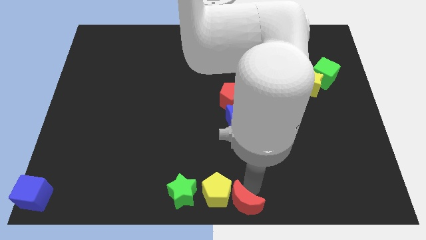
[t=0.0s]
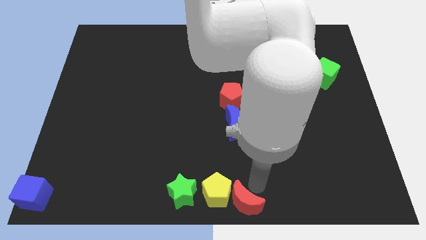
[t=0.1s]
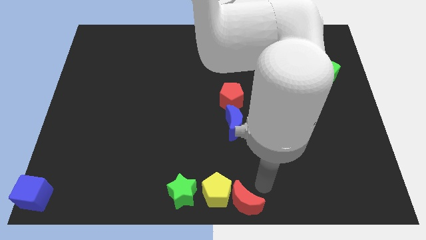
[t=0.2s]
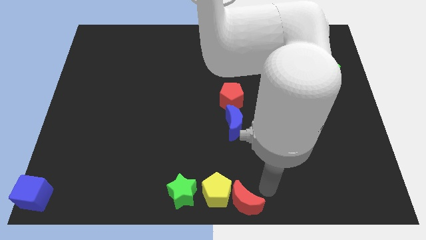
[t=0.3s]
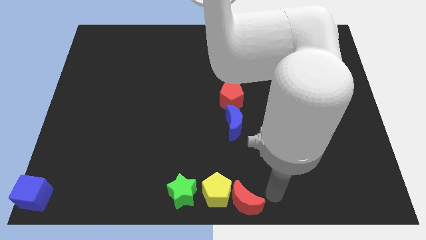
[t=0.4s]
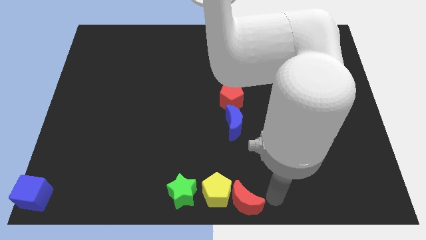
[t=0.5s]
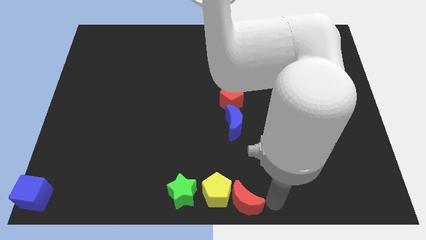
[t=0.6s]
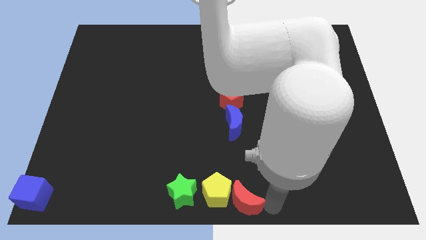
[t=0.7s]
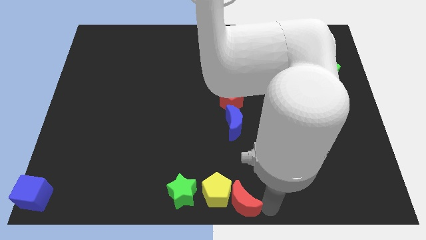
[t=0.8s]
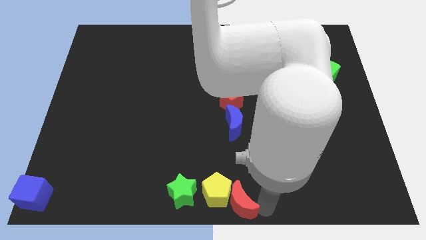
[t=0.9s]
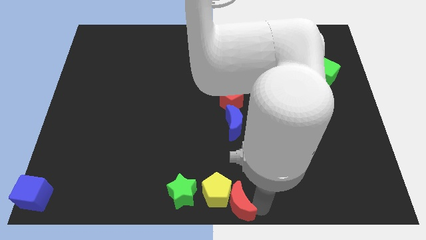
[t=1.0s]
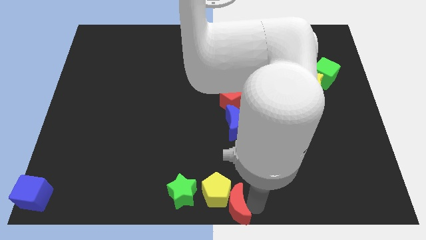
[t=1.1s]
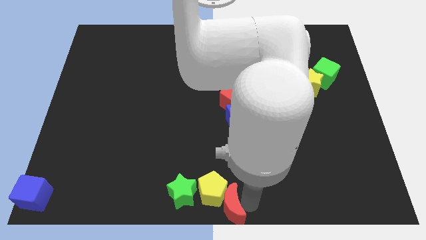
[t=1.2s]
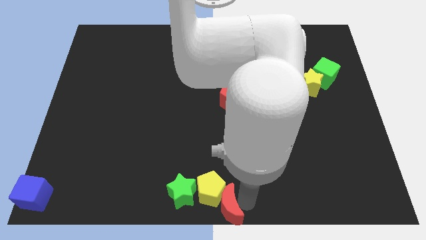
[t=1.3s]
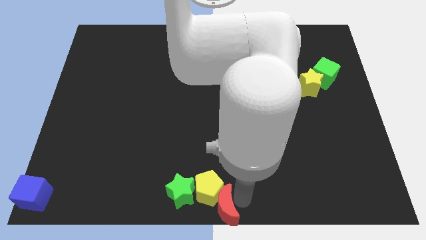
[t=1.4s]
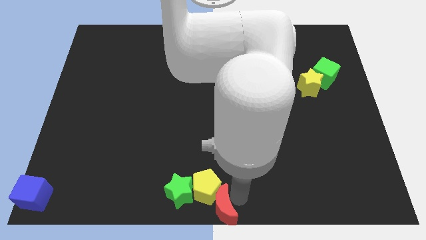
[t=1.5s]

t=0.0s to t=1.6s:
move the red crescent into the yellow pentagon

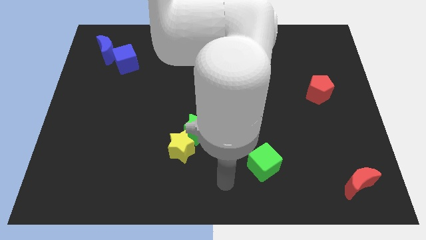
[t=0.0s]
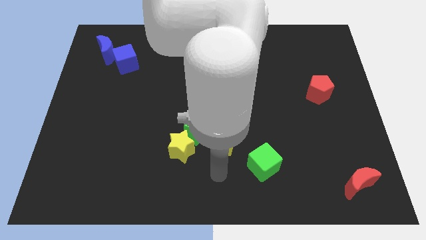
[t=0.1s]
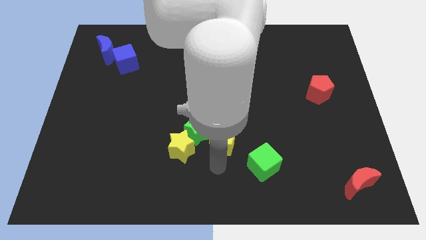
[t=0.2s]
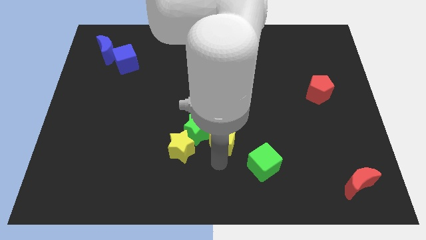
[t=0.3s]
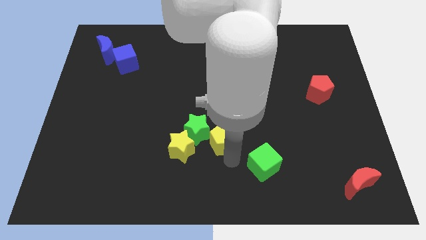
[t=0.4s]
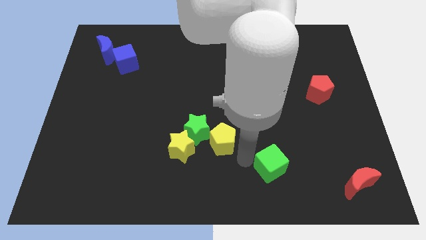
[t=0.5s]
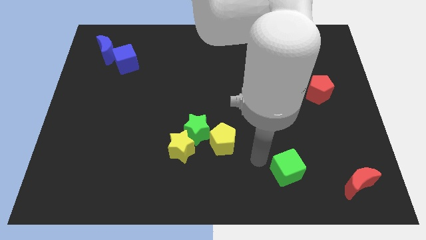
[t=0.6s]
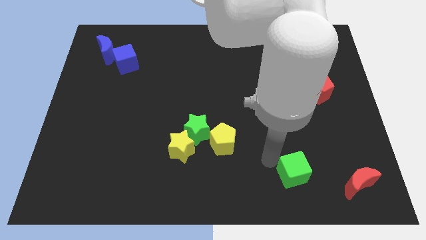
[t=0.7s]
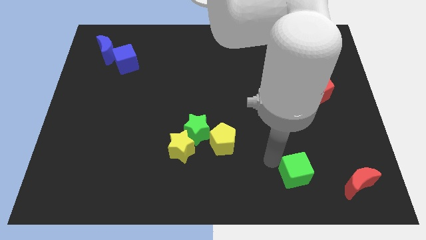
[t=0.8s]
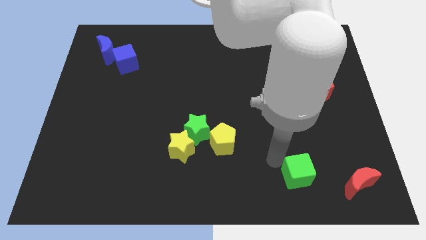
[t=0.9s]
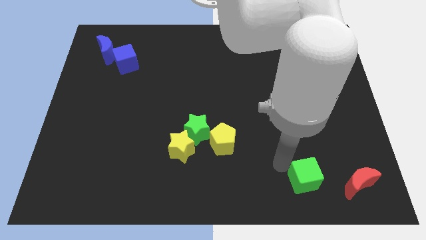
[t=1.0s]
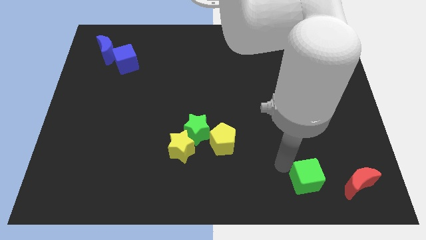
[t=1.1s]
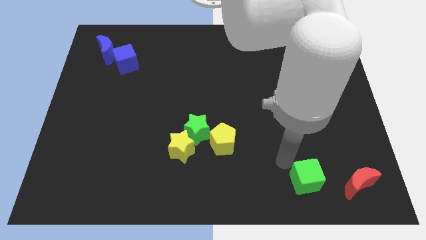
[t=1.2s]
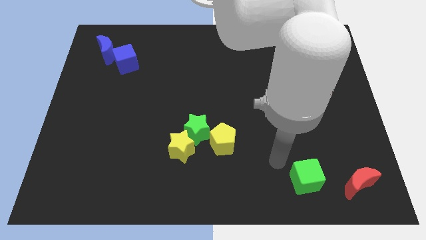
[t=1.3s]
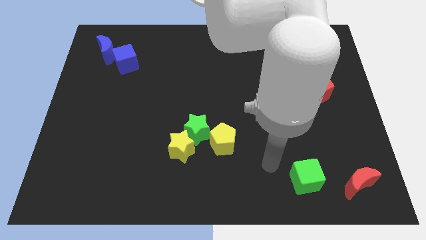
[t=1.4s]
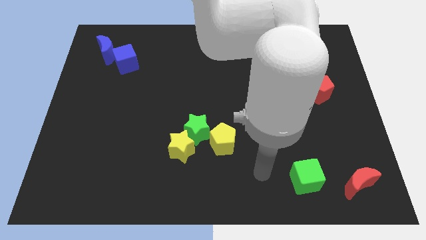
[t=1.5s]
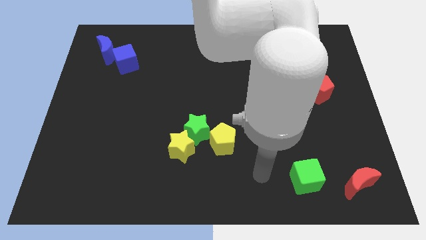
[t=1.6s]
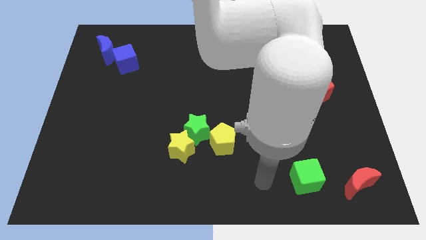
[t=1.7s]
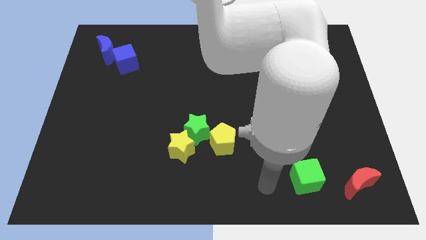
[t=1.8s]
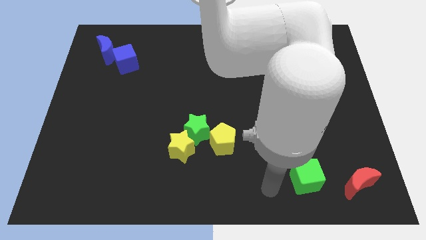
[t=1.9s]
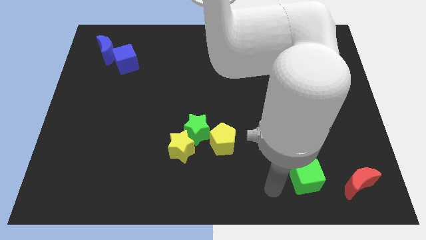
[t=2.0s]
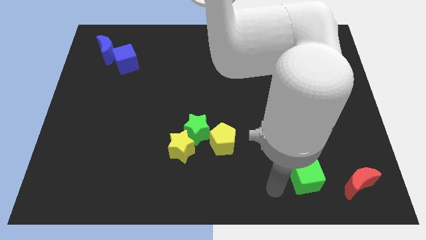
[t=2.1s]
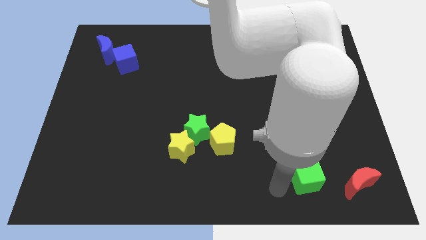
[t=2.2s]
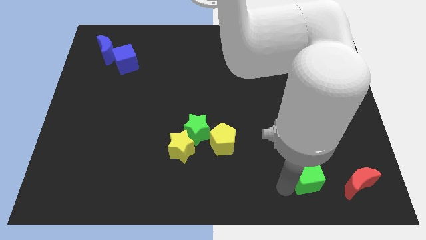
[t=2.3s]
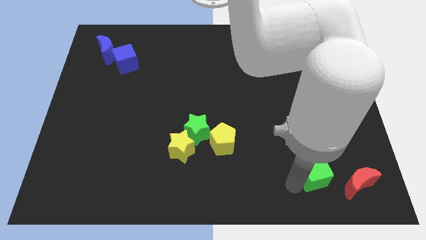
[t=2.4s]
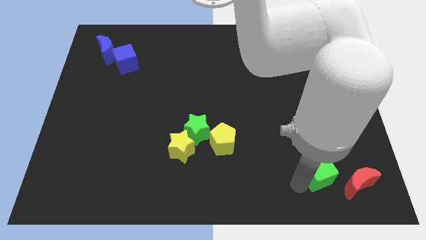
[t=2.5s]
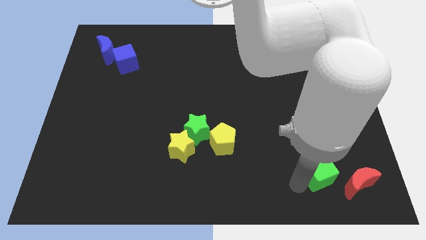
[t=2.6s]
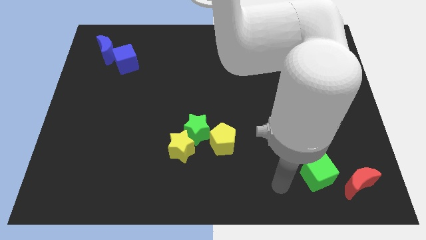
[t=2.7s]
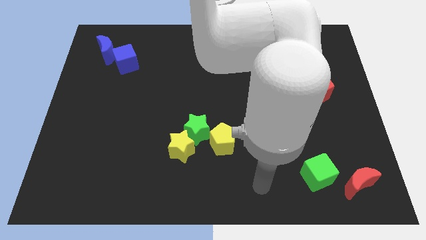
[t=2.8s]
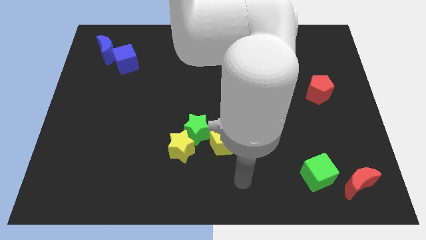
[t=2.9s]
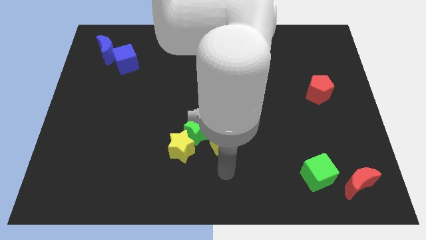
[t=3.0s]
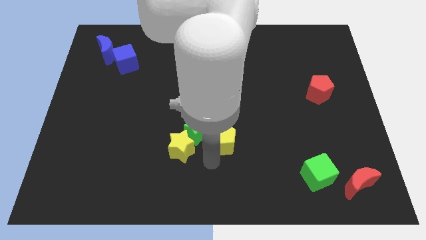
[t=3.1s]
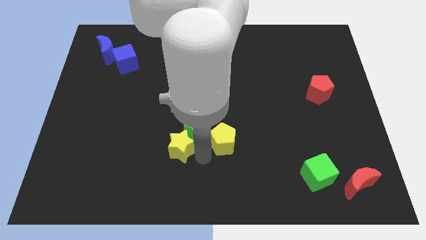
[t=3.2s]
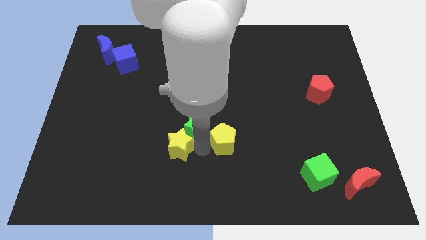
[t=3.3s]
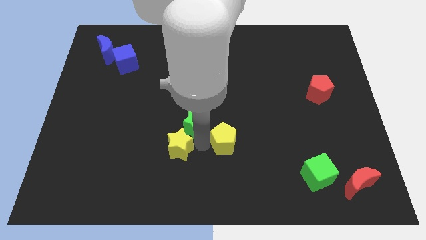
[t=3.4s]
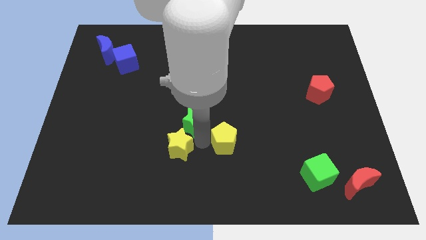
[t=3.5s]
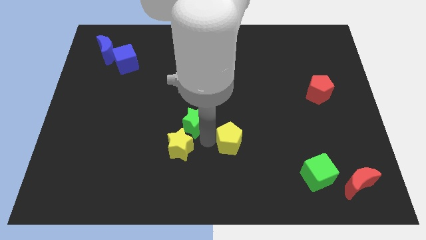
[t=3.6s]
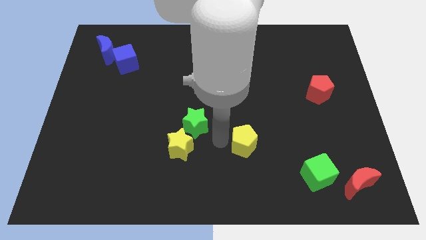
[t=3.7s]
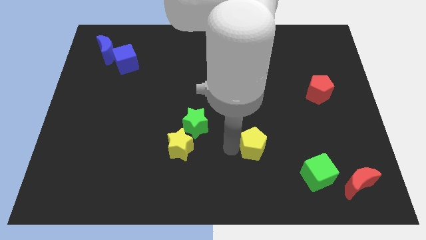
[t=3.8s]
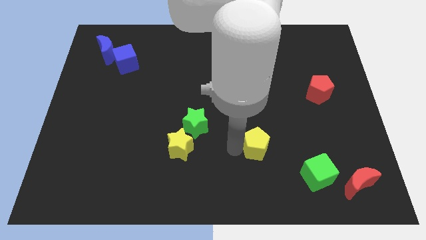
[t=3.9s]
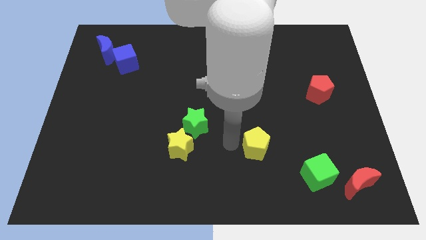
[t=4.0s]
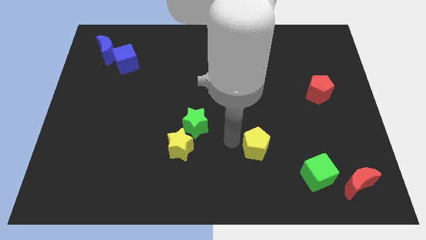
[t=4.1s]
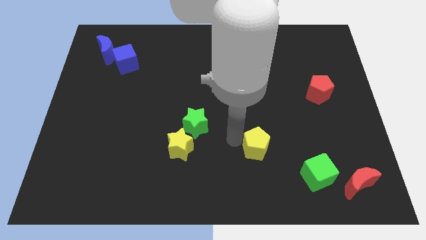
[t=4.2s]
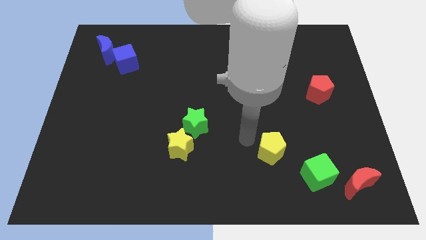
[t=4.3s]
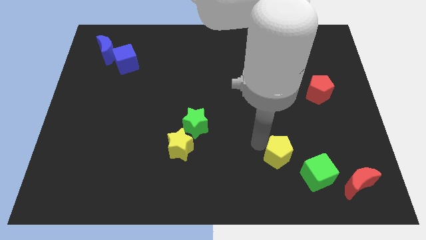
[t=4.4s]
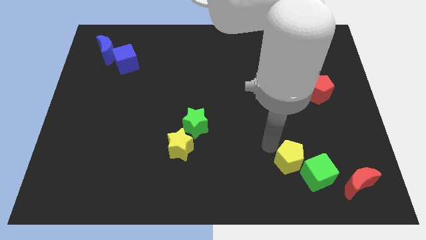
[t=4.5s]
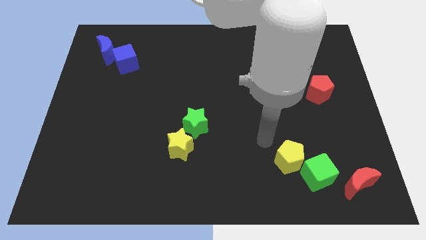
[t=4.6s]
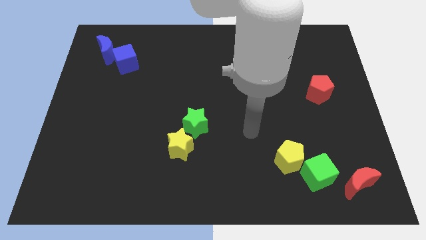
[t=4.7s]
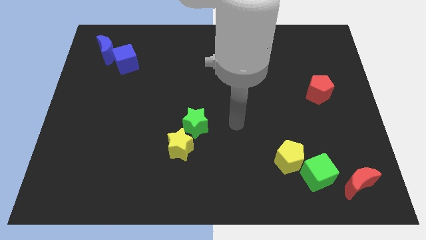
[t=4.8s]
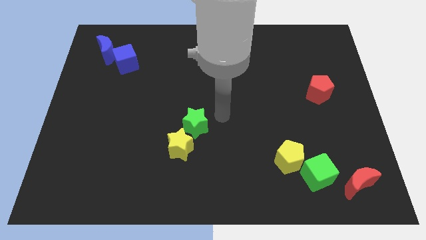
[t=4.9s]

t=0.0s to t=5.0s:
move the yellow pentagon into the green cube

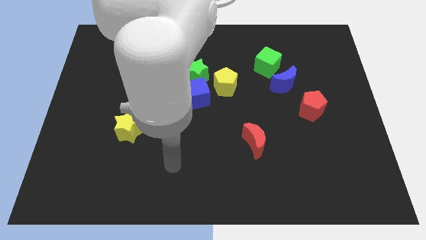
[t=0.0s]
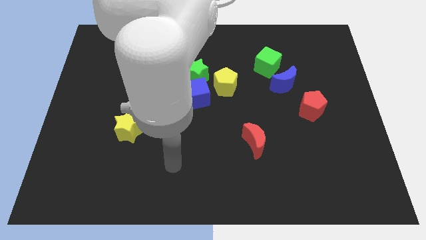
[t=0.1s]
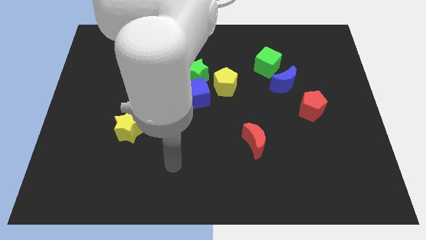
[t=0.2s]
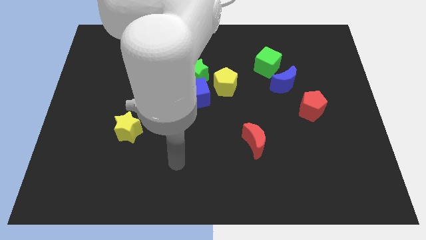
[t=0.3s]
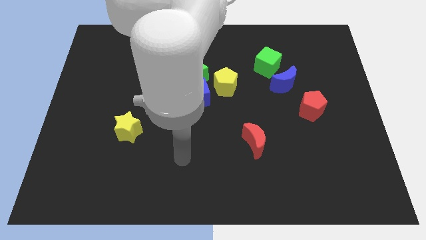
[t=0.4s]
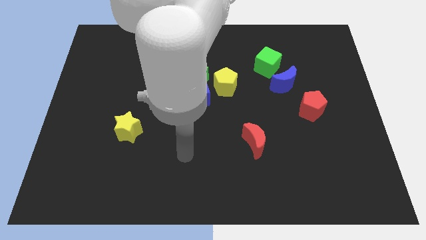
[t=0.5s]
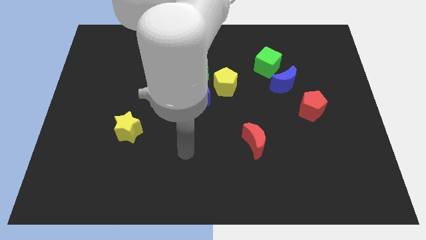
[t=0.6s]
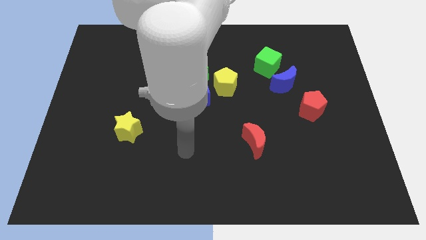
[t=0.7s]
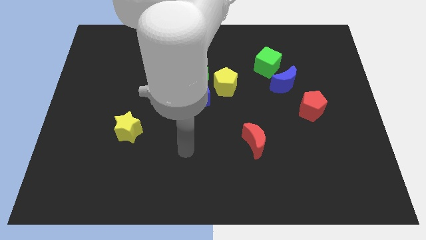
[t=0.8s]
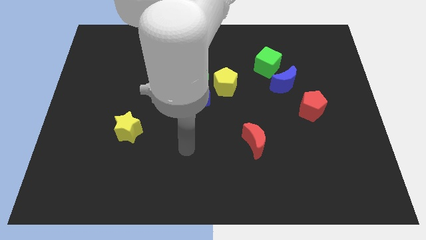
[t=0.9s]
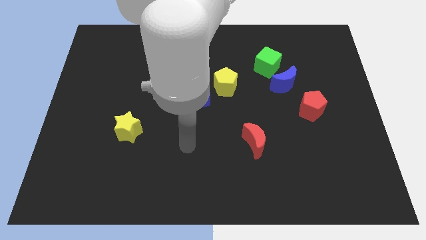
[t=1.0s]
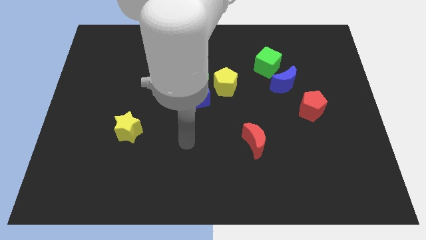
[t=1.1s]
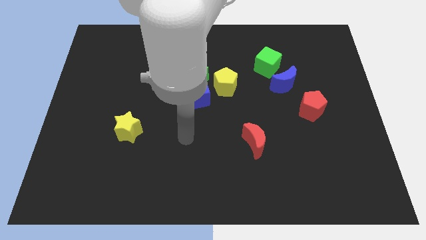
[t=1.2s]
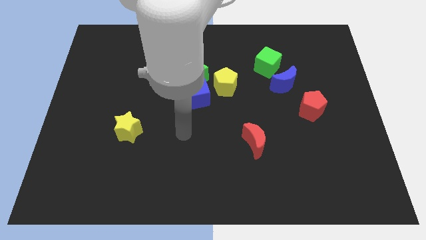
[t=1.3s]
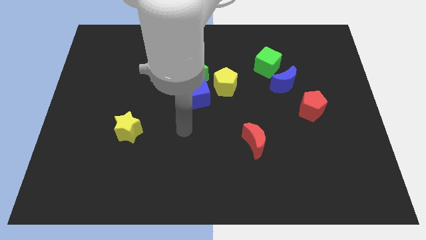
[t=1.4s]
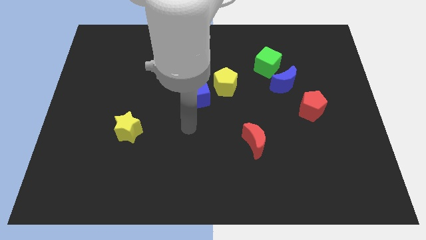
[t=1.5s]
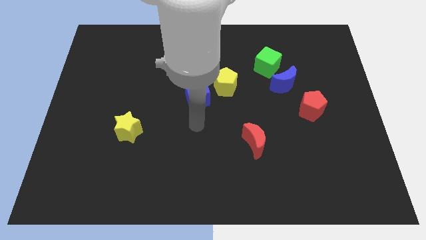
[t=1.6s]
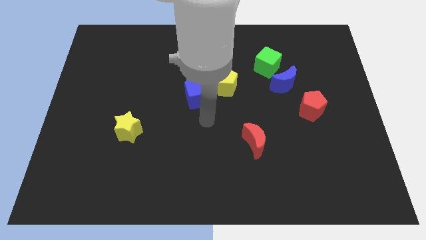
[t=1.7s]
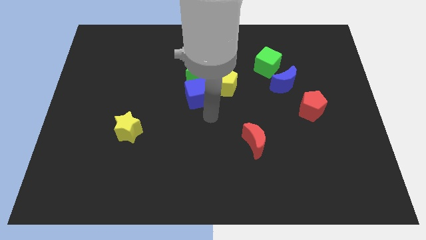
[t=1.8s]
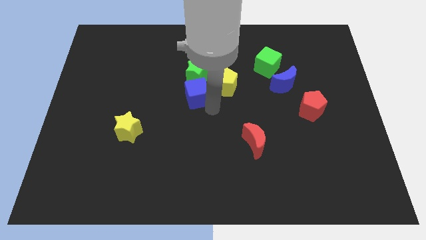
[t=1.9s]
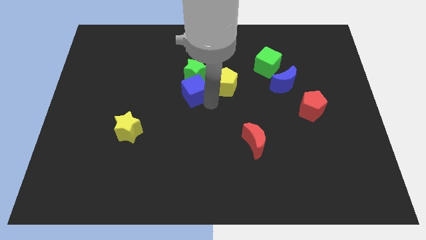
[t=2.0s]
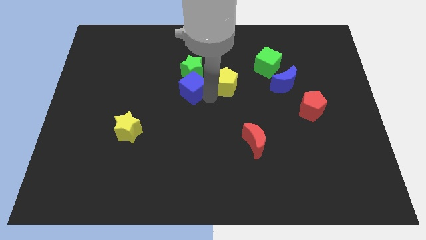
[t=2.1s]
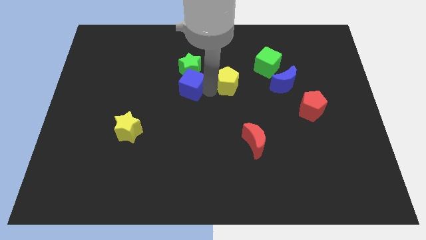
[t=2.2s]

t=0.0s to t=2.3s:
slightly push the blue cube upwards

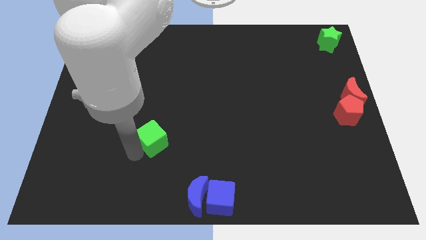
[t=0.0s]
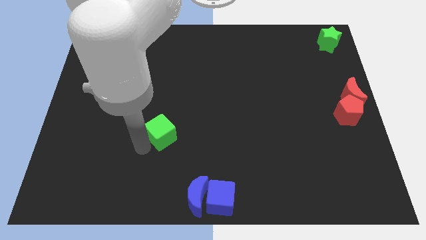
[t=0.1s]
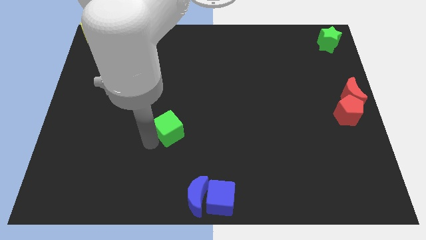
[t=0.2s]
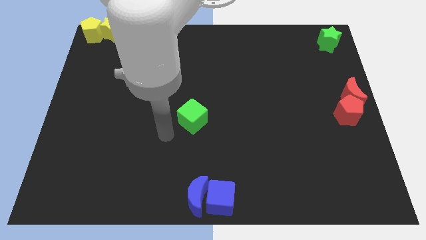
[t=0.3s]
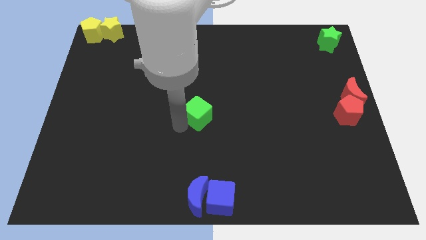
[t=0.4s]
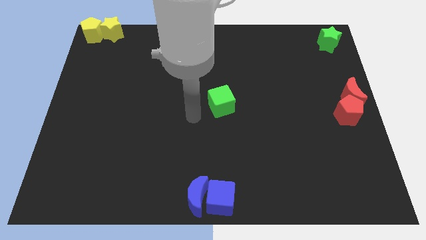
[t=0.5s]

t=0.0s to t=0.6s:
move the green cube towards the center of the board
